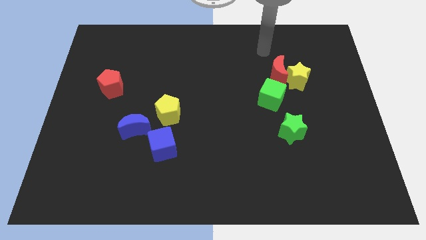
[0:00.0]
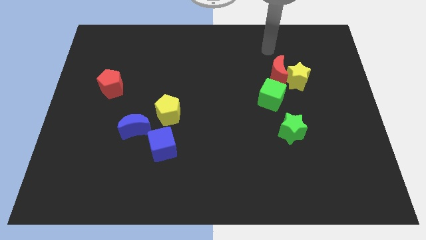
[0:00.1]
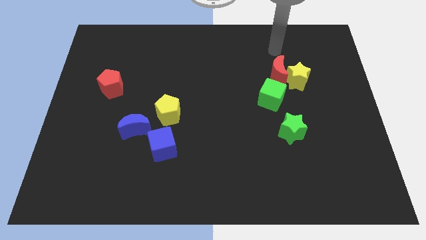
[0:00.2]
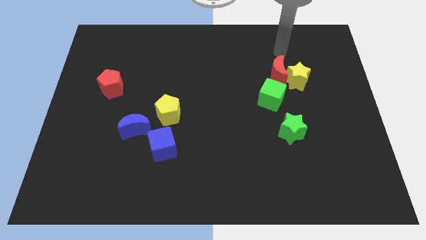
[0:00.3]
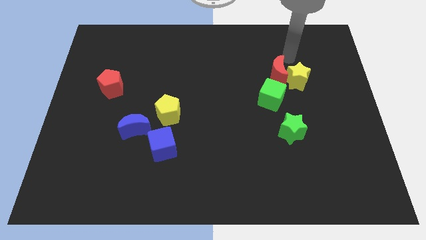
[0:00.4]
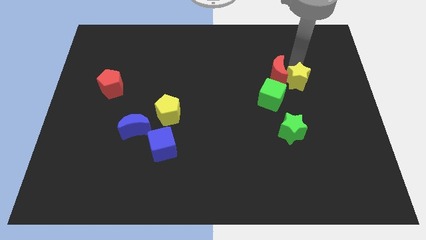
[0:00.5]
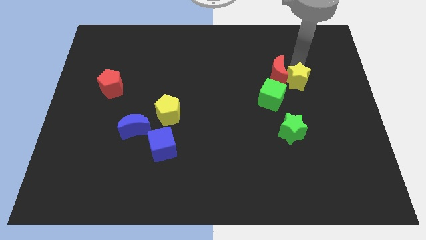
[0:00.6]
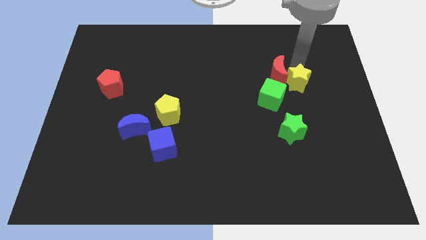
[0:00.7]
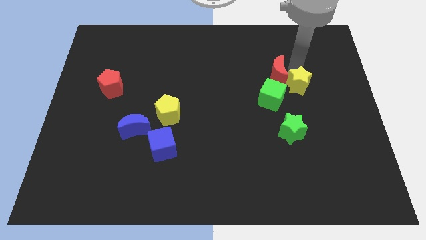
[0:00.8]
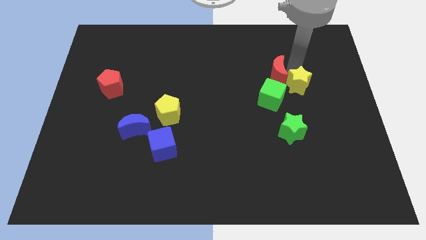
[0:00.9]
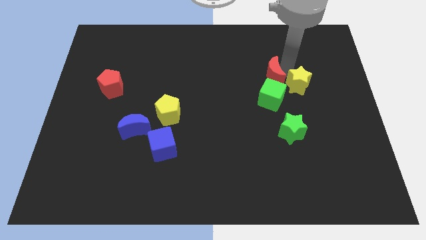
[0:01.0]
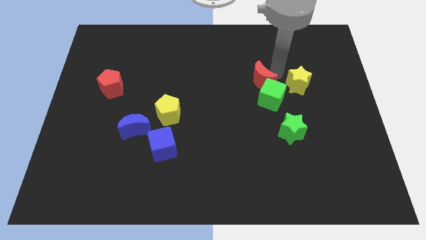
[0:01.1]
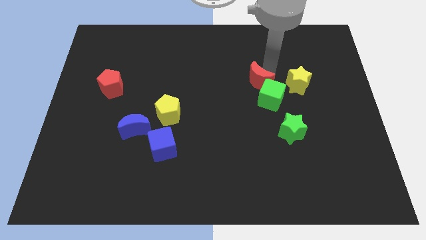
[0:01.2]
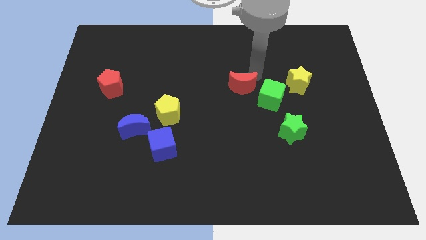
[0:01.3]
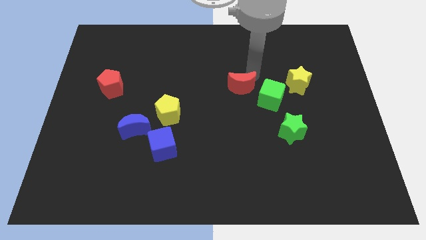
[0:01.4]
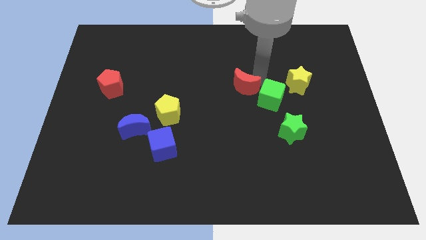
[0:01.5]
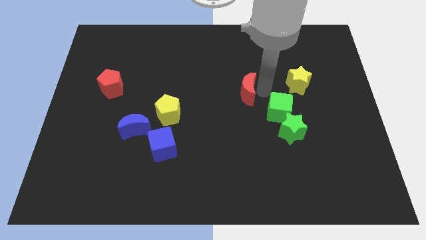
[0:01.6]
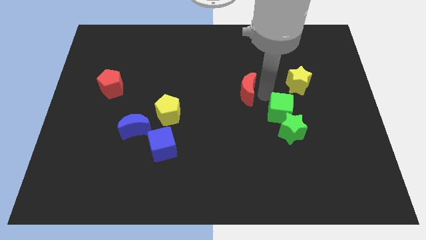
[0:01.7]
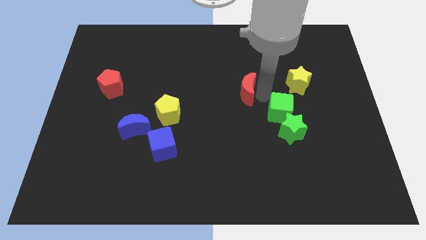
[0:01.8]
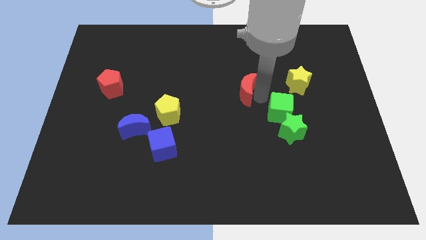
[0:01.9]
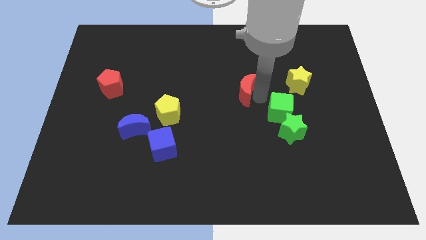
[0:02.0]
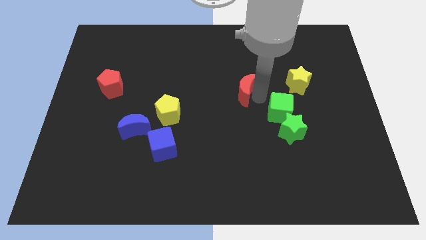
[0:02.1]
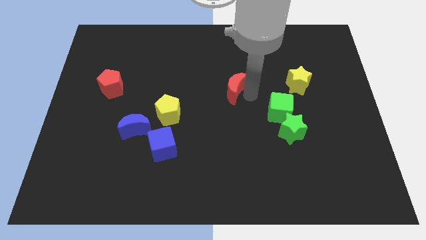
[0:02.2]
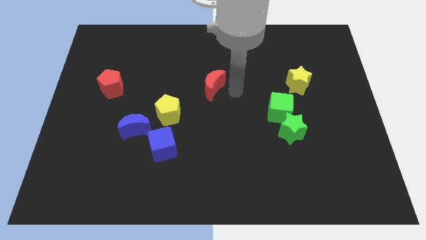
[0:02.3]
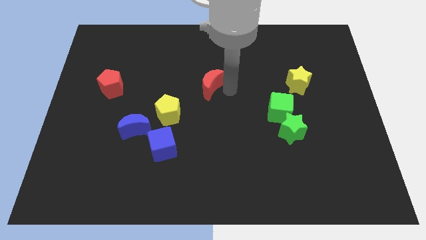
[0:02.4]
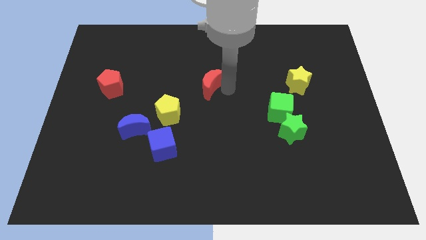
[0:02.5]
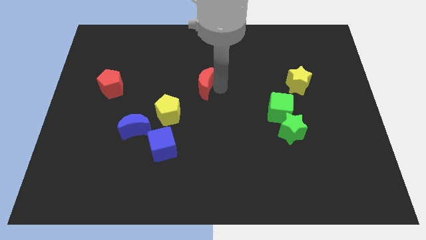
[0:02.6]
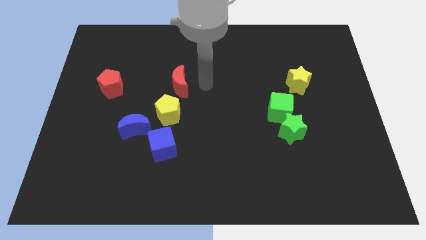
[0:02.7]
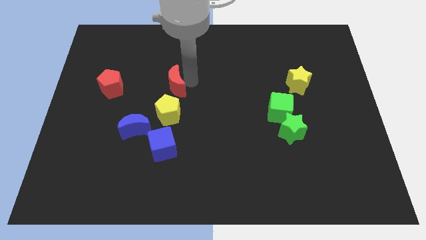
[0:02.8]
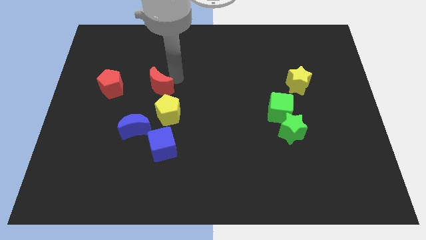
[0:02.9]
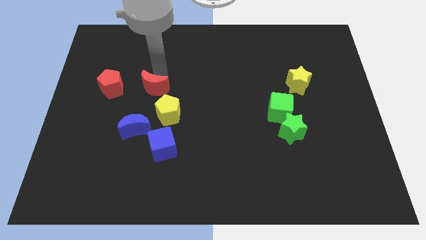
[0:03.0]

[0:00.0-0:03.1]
push the red crescent to the top of the yellow pentagon

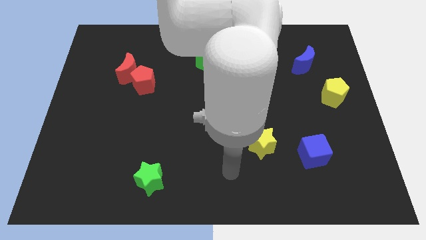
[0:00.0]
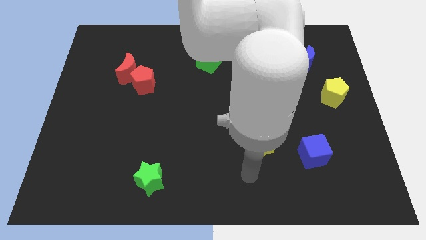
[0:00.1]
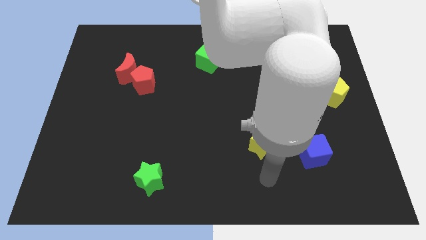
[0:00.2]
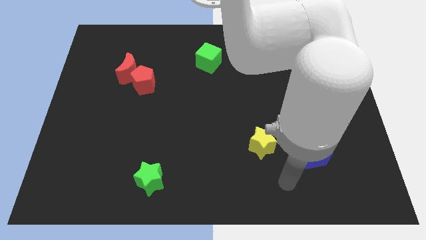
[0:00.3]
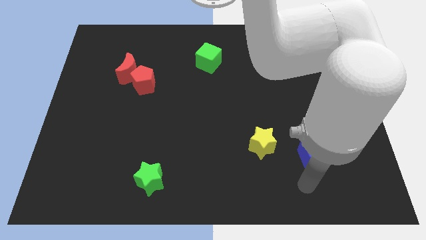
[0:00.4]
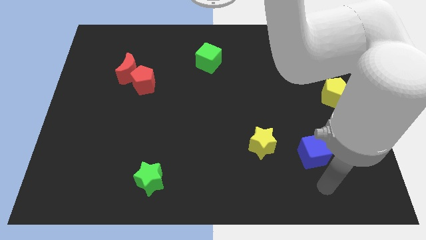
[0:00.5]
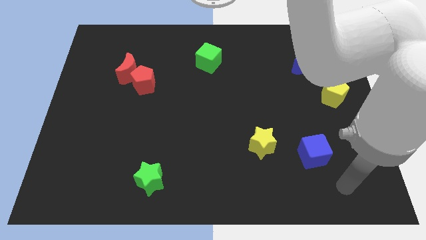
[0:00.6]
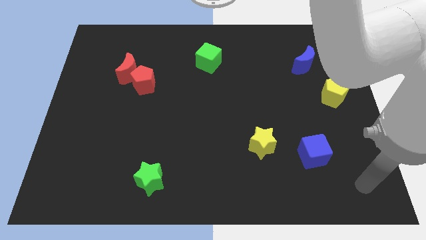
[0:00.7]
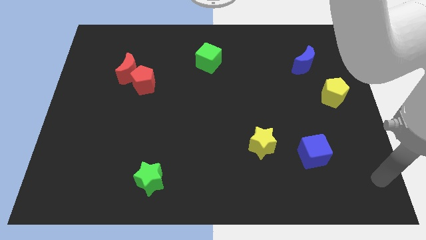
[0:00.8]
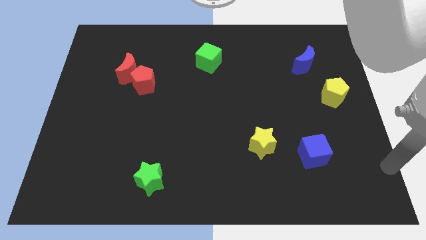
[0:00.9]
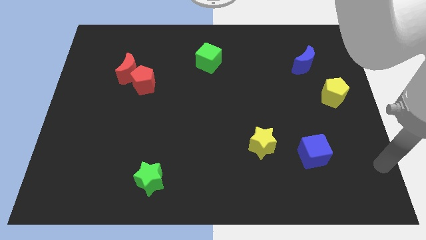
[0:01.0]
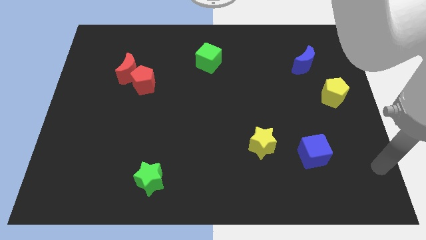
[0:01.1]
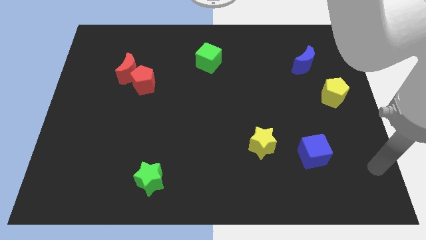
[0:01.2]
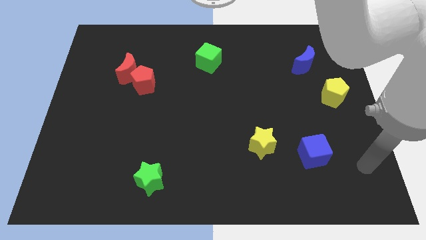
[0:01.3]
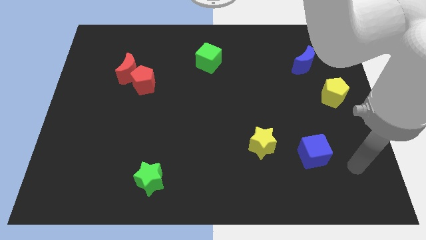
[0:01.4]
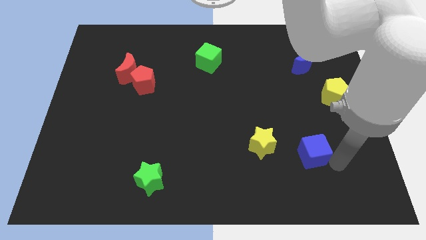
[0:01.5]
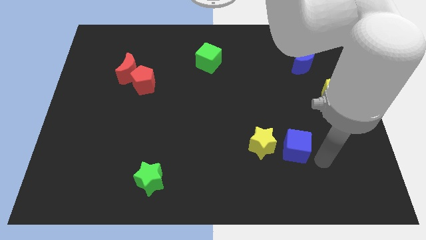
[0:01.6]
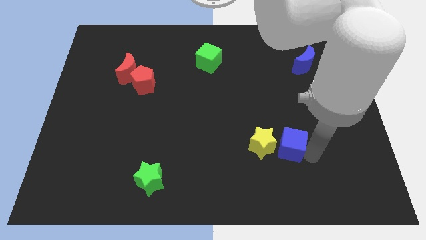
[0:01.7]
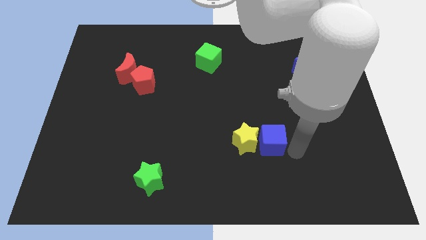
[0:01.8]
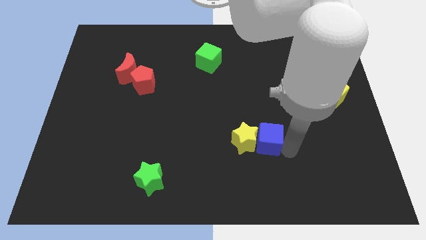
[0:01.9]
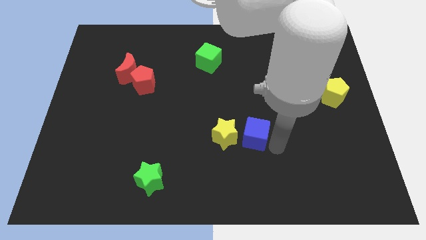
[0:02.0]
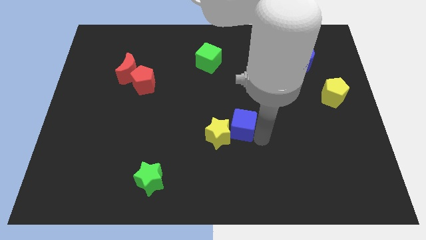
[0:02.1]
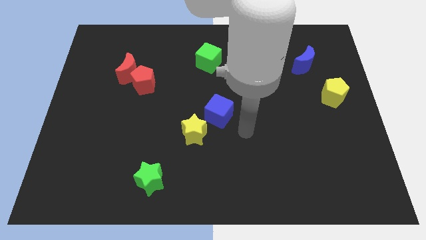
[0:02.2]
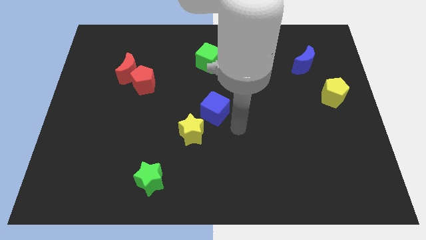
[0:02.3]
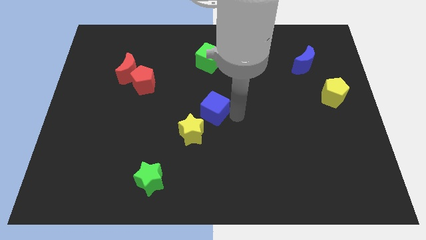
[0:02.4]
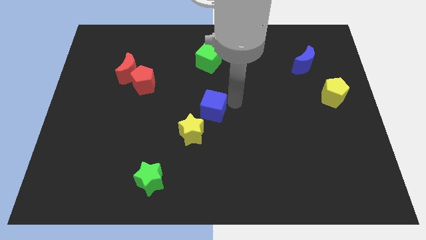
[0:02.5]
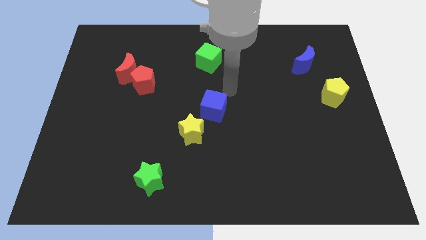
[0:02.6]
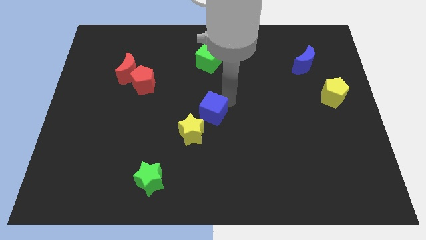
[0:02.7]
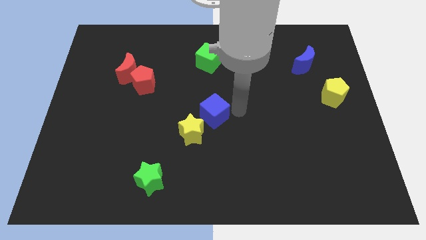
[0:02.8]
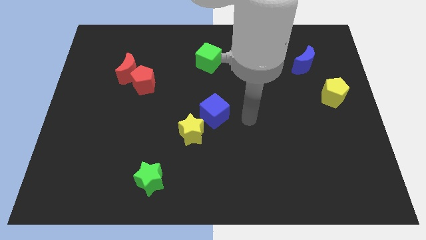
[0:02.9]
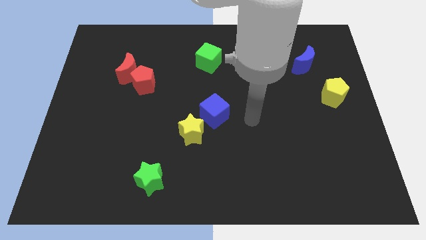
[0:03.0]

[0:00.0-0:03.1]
slide blue cube along with yellow star towards the center

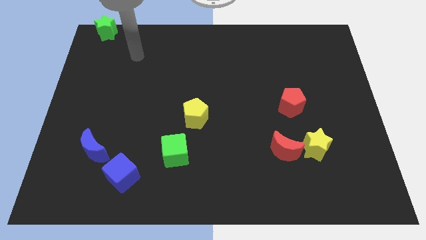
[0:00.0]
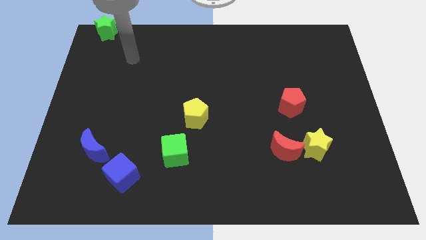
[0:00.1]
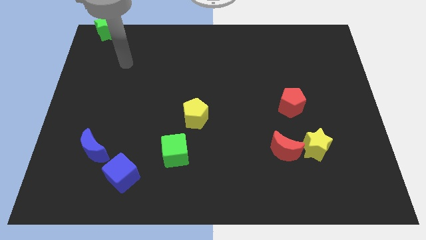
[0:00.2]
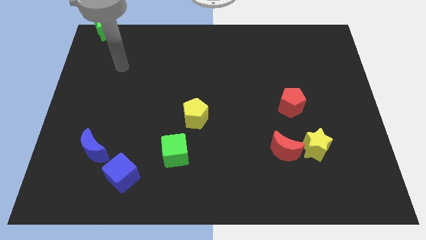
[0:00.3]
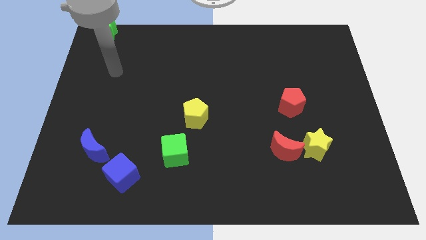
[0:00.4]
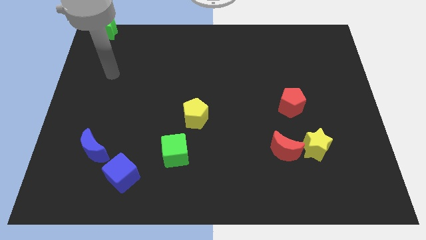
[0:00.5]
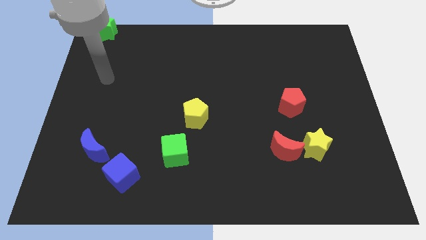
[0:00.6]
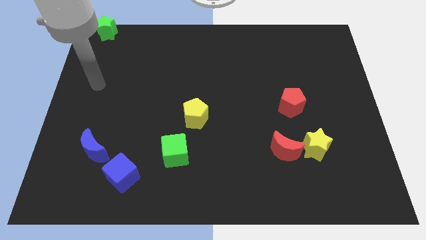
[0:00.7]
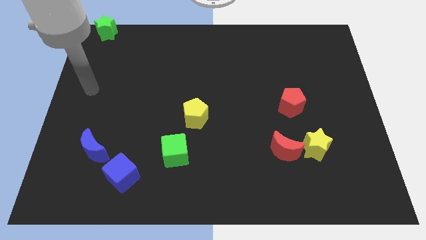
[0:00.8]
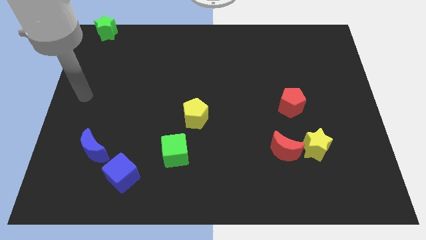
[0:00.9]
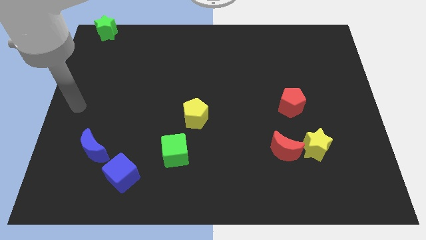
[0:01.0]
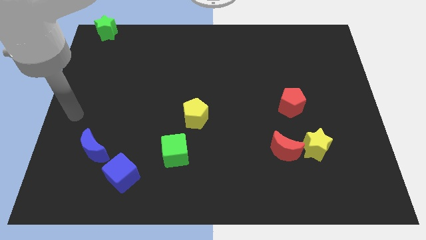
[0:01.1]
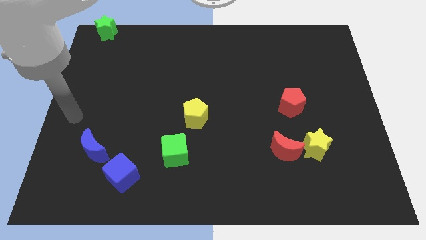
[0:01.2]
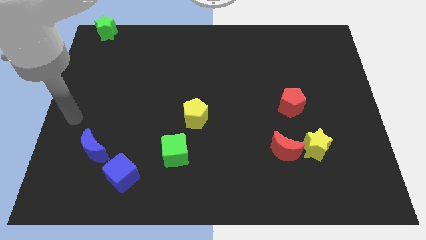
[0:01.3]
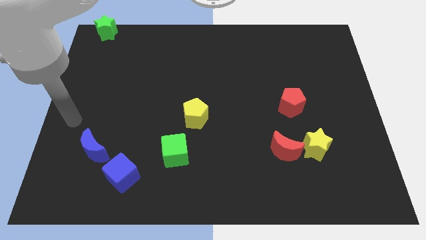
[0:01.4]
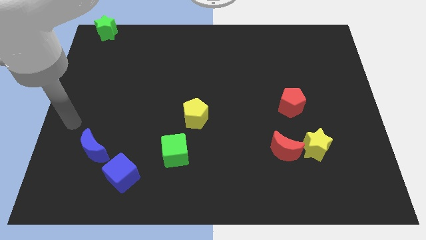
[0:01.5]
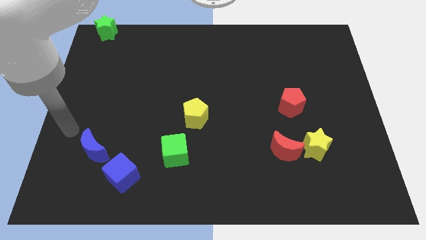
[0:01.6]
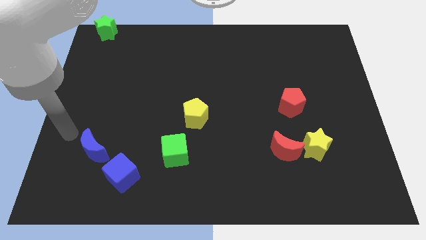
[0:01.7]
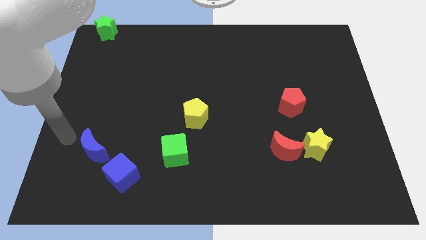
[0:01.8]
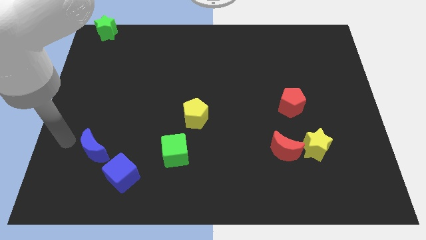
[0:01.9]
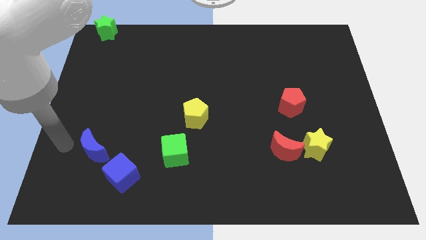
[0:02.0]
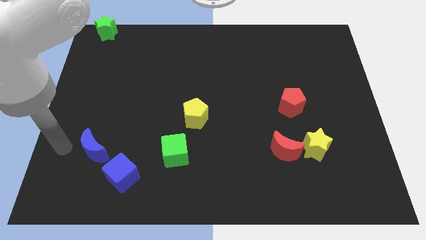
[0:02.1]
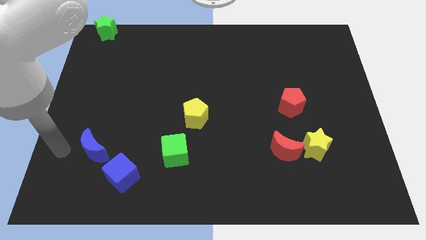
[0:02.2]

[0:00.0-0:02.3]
point your hand at the left side of the blue moon

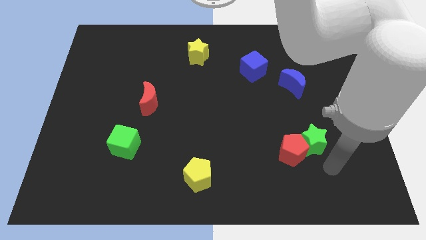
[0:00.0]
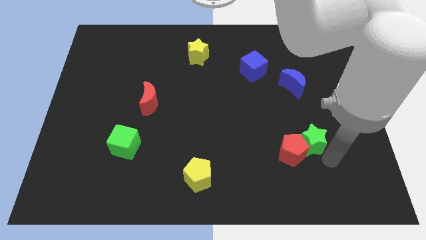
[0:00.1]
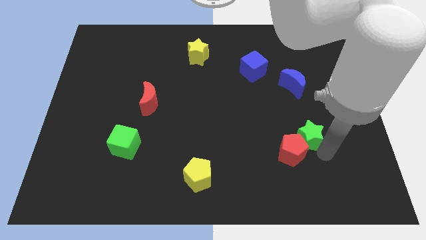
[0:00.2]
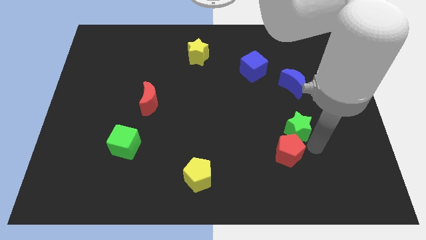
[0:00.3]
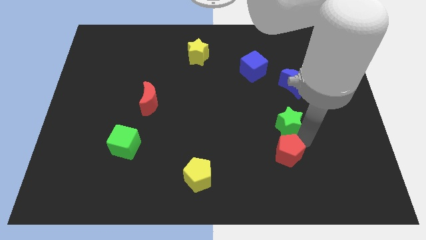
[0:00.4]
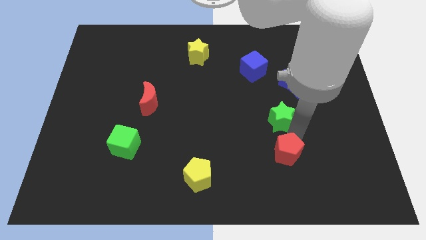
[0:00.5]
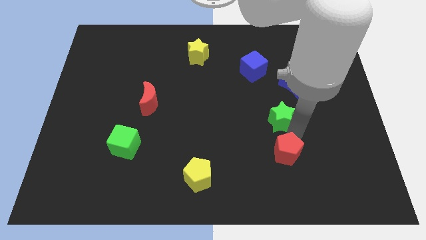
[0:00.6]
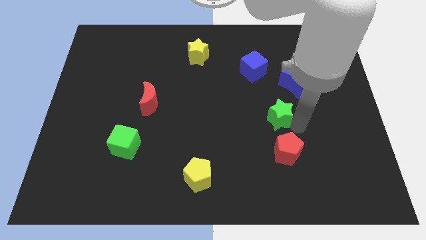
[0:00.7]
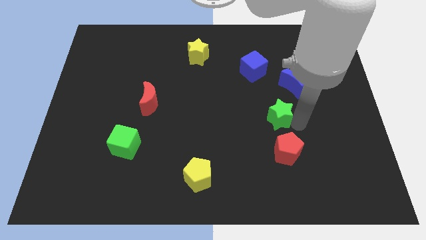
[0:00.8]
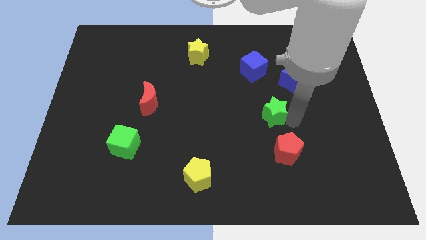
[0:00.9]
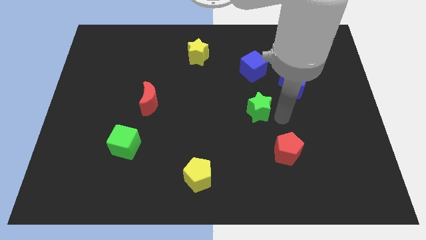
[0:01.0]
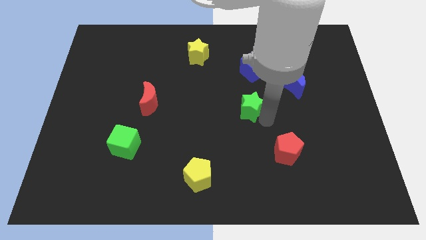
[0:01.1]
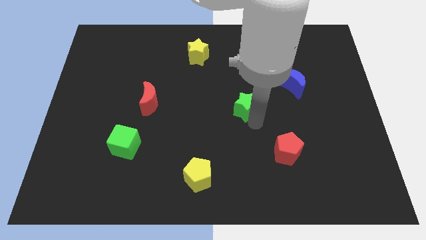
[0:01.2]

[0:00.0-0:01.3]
separate the green star from the red pentagon
